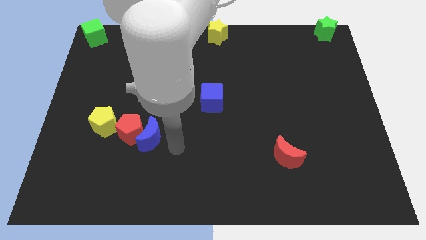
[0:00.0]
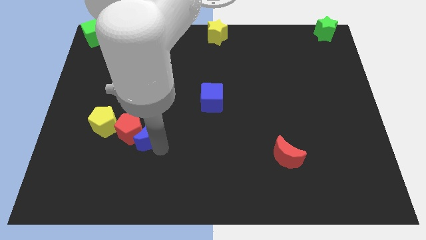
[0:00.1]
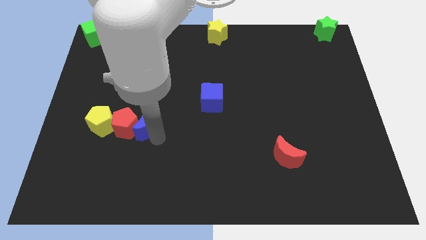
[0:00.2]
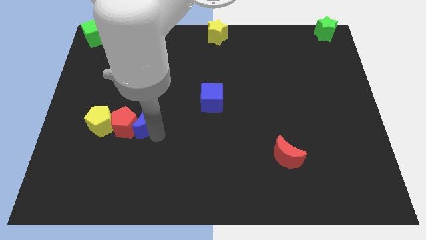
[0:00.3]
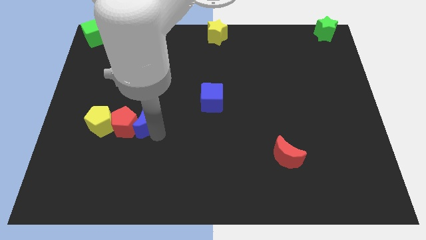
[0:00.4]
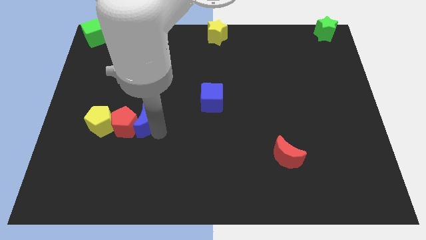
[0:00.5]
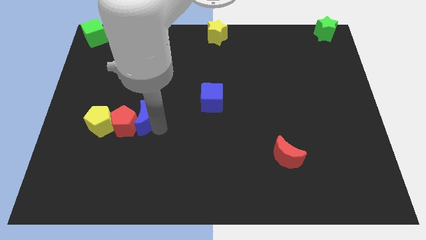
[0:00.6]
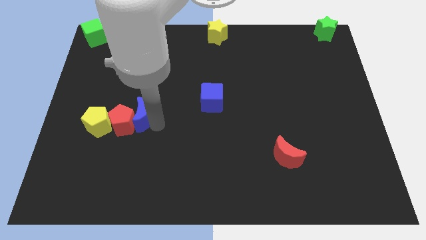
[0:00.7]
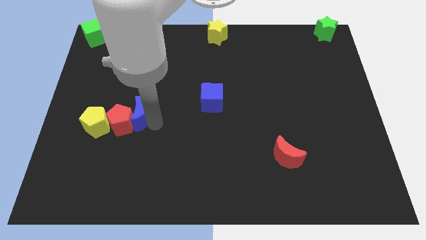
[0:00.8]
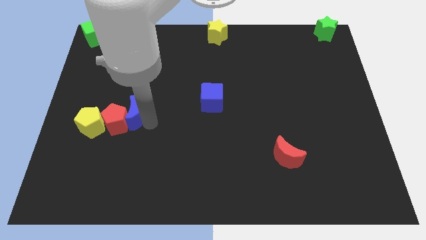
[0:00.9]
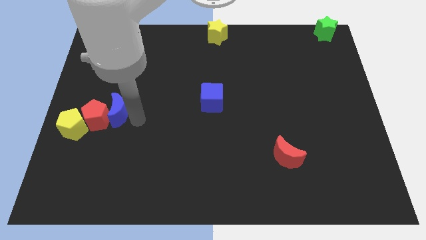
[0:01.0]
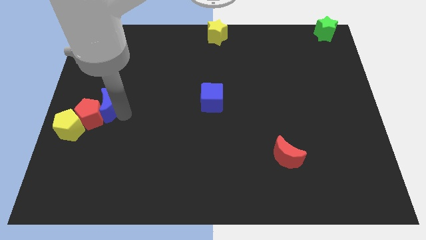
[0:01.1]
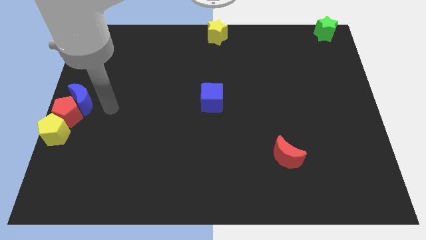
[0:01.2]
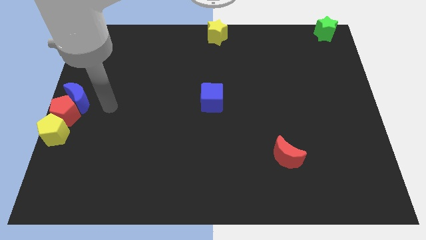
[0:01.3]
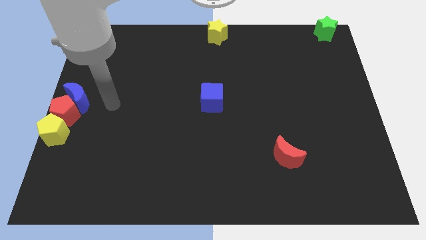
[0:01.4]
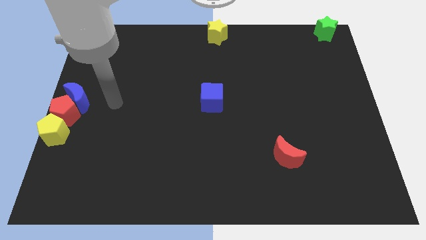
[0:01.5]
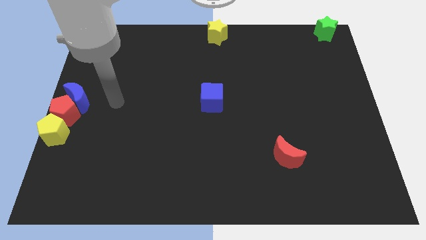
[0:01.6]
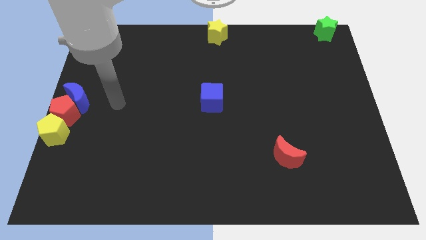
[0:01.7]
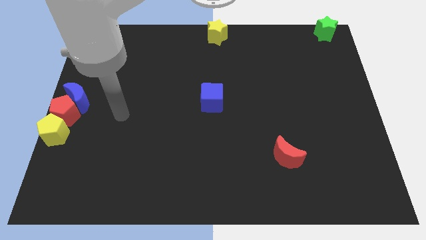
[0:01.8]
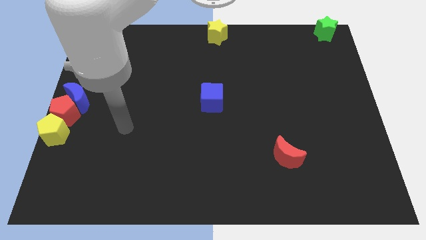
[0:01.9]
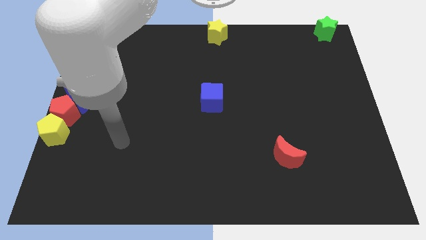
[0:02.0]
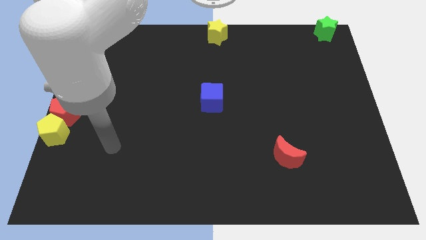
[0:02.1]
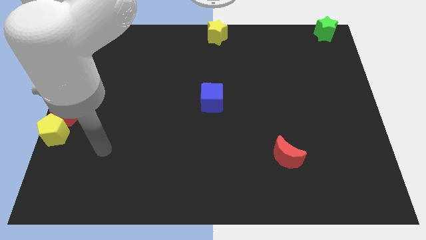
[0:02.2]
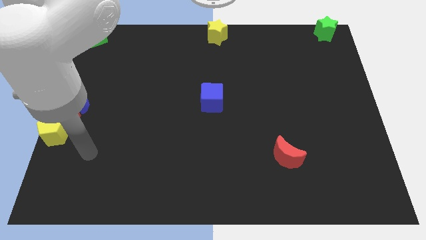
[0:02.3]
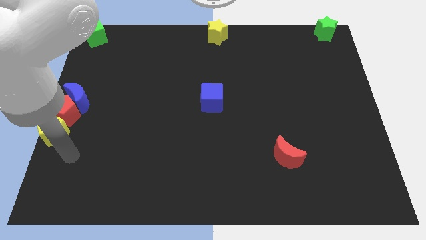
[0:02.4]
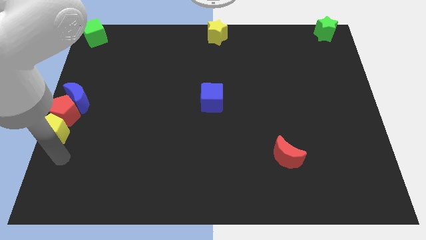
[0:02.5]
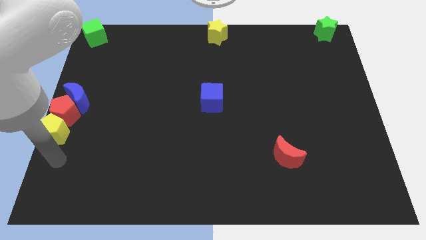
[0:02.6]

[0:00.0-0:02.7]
place the blue moon top of red pentagon

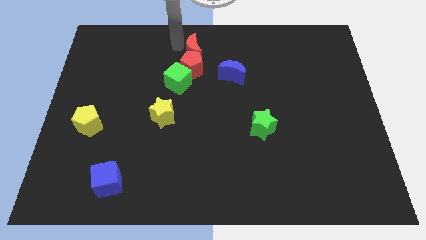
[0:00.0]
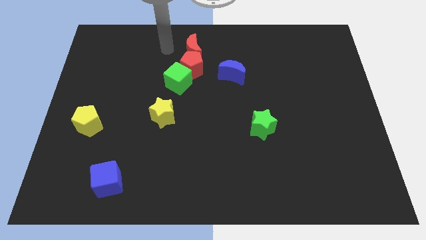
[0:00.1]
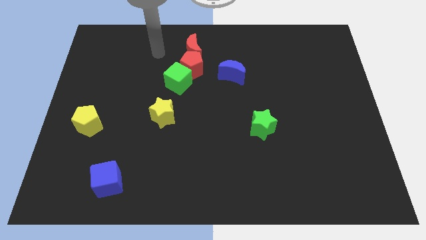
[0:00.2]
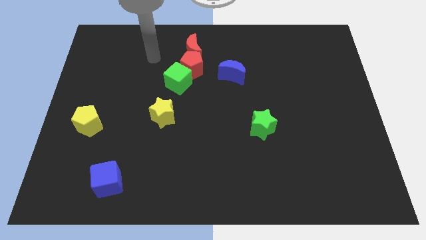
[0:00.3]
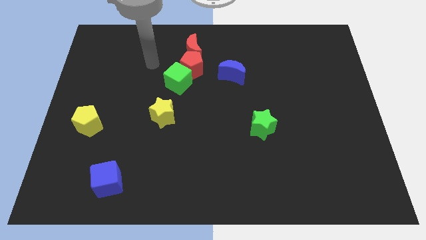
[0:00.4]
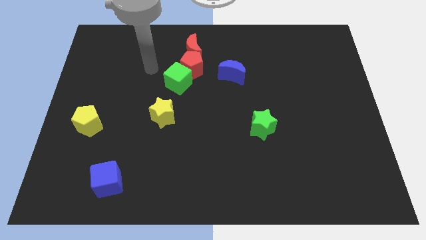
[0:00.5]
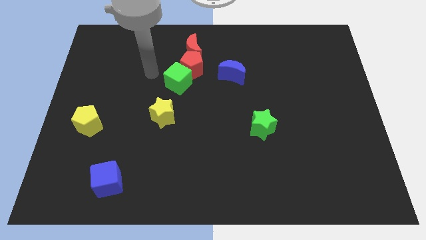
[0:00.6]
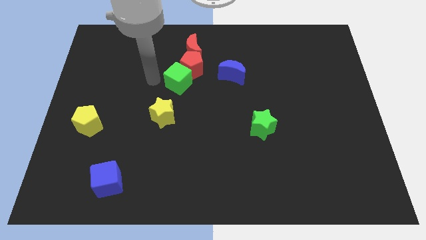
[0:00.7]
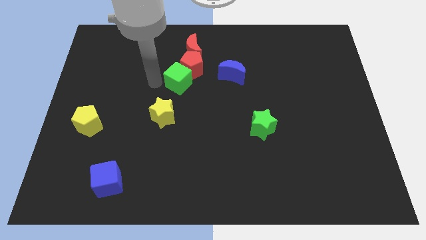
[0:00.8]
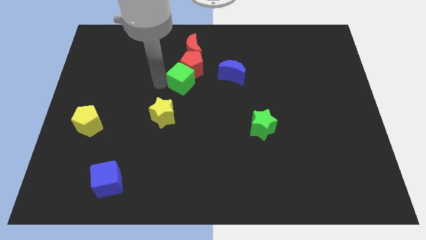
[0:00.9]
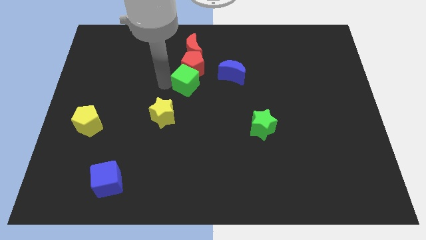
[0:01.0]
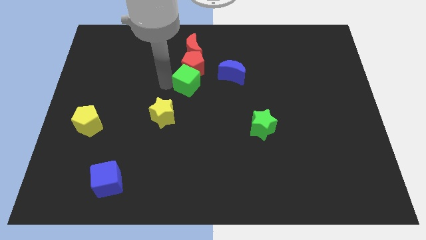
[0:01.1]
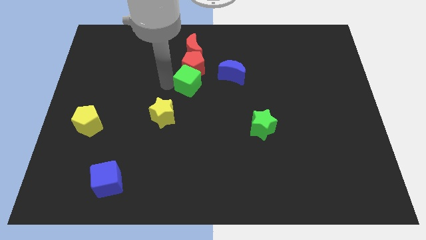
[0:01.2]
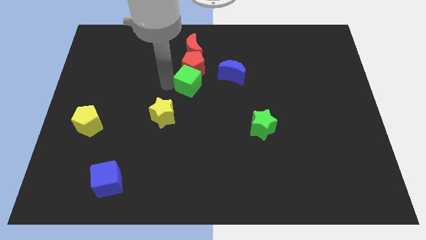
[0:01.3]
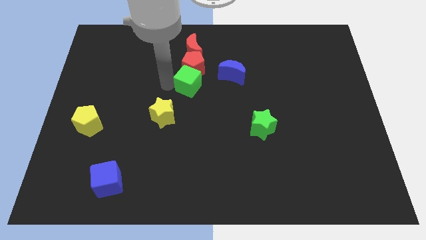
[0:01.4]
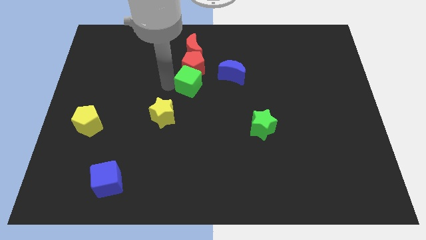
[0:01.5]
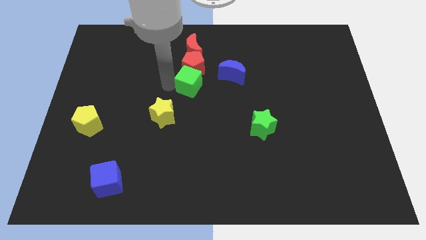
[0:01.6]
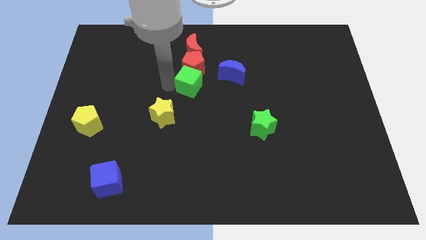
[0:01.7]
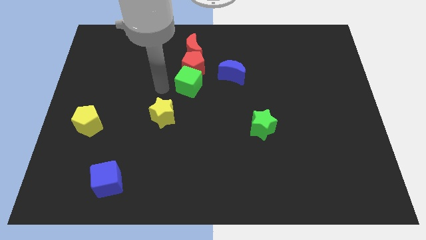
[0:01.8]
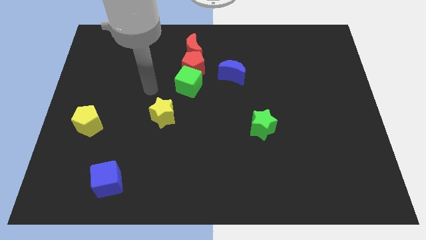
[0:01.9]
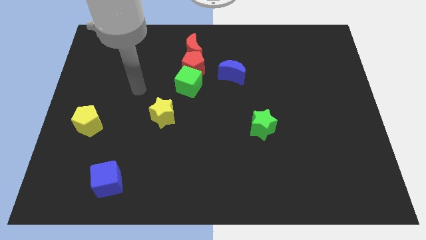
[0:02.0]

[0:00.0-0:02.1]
slightly push the green cube below red pentagon

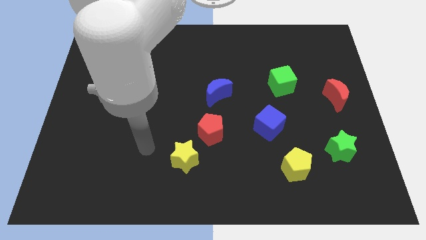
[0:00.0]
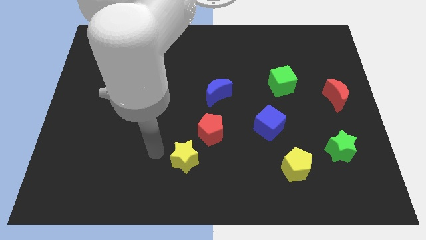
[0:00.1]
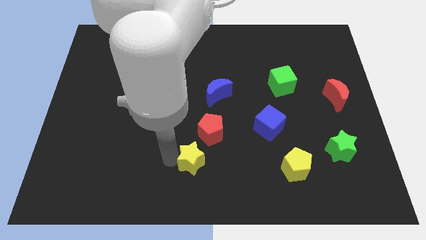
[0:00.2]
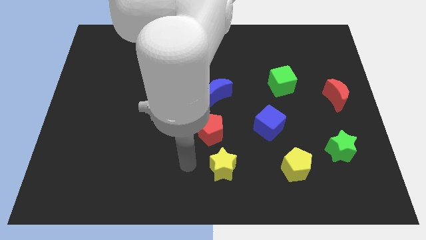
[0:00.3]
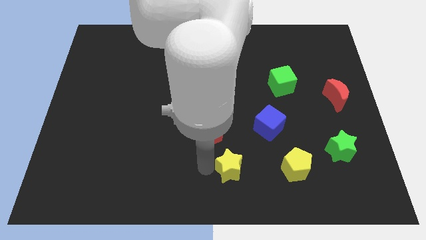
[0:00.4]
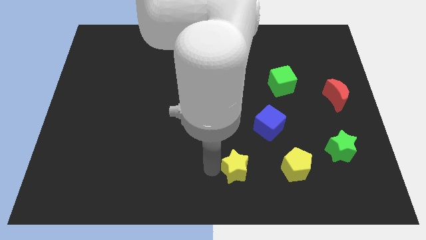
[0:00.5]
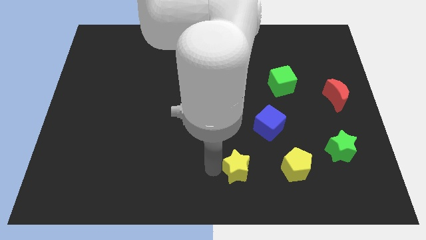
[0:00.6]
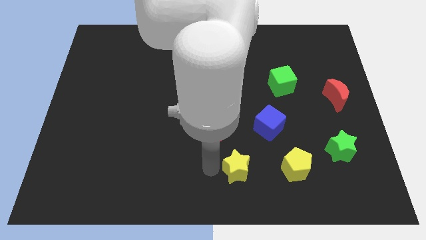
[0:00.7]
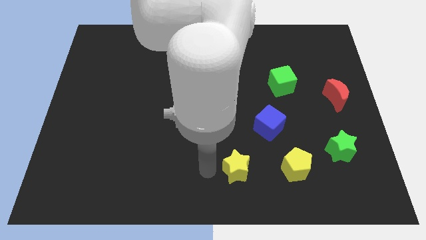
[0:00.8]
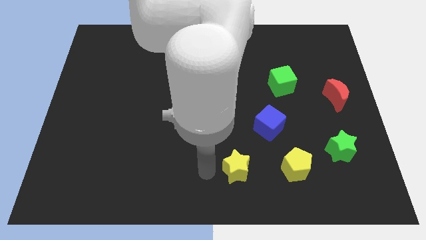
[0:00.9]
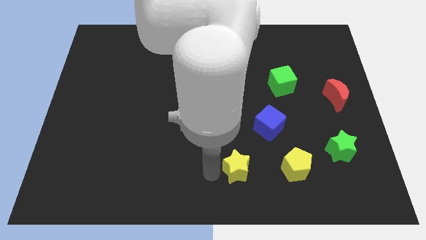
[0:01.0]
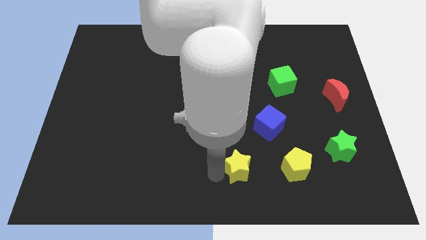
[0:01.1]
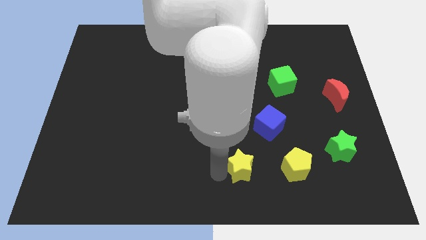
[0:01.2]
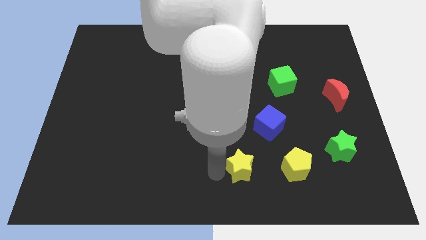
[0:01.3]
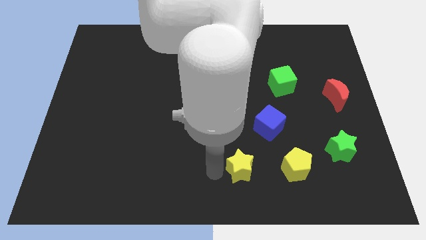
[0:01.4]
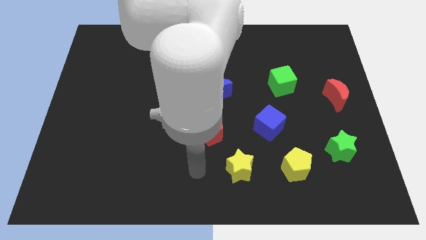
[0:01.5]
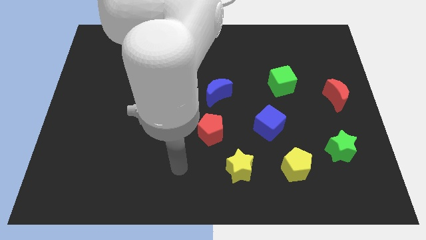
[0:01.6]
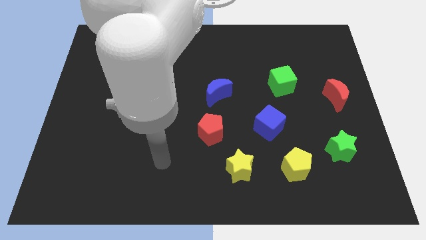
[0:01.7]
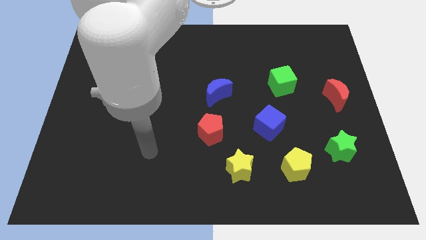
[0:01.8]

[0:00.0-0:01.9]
move the yellow star left to the yellow pentagon

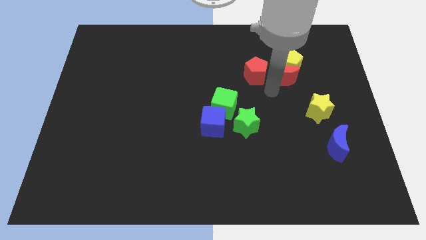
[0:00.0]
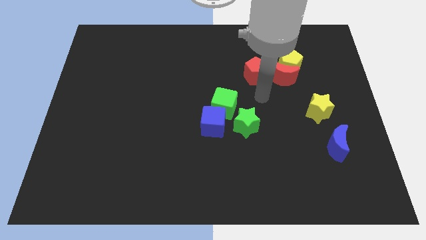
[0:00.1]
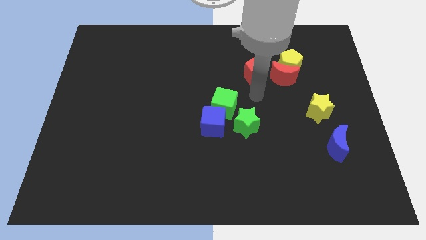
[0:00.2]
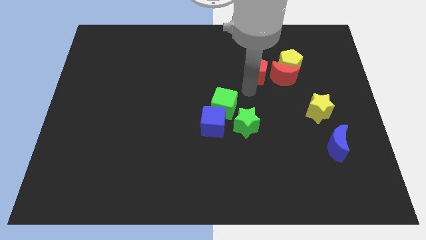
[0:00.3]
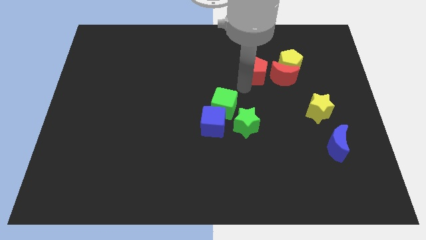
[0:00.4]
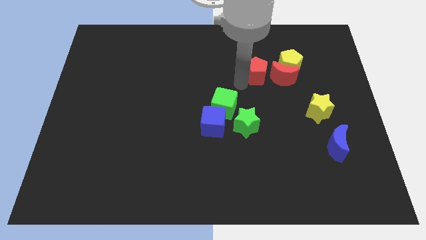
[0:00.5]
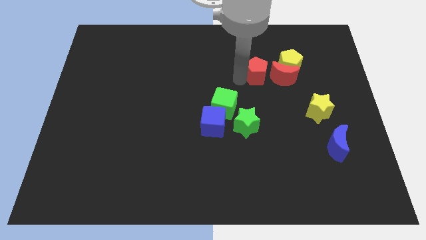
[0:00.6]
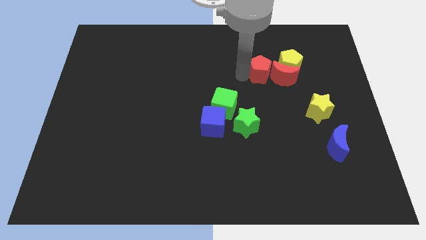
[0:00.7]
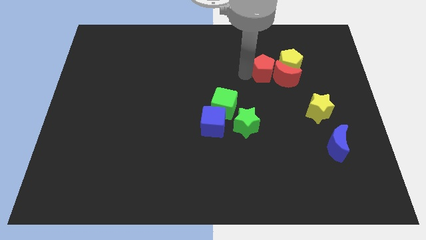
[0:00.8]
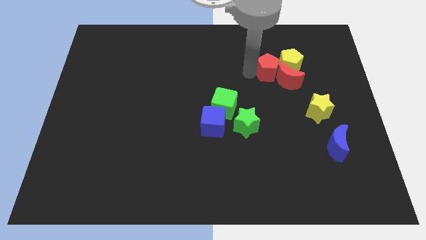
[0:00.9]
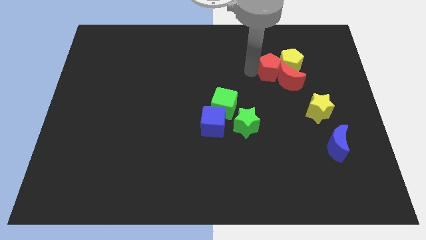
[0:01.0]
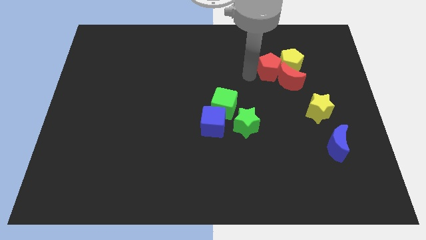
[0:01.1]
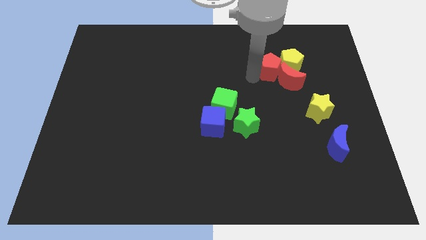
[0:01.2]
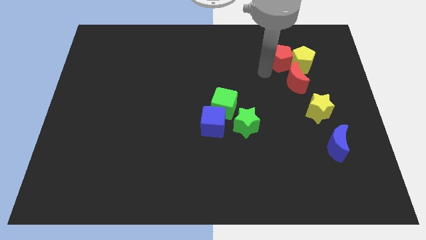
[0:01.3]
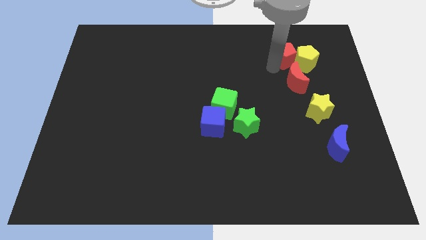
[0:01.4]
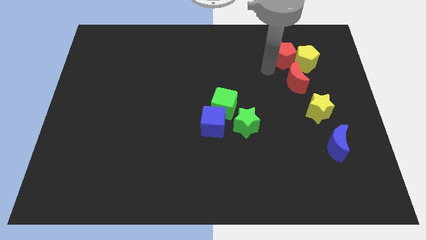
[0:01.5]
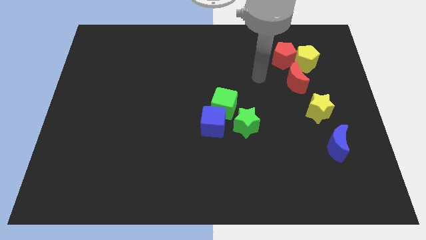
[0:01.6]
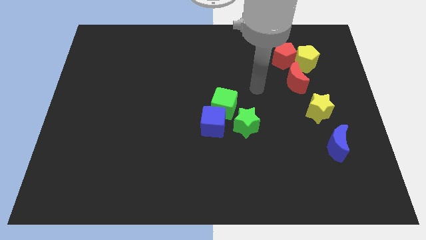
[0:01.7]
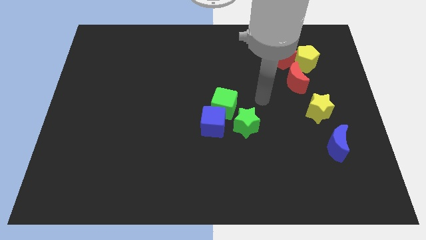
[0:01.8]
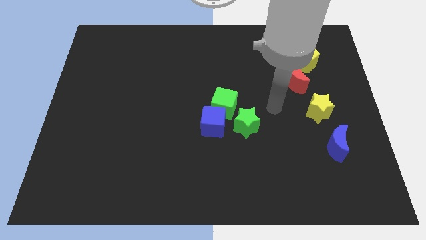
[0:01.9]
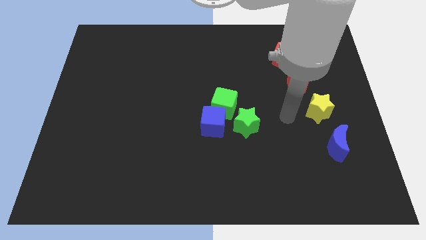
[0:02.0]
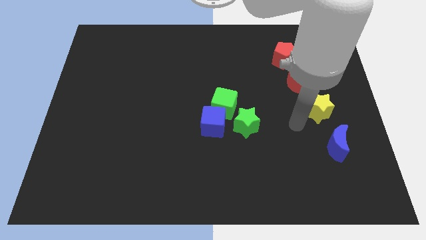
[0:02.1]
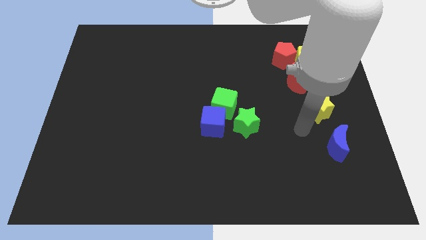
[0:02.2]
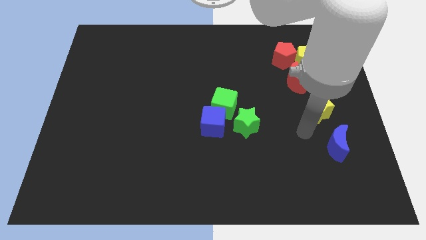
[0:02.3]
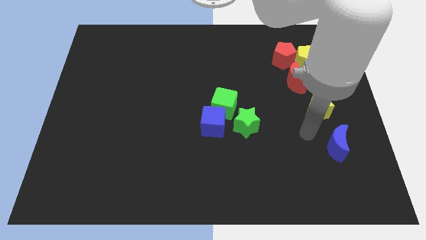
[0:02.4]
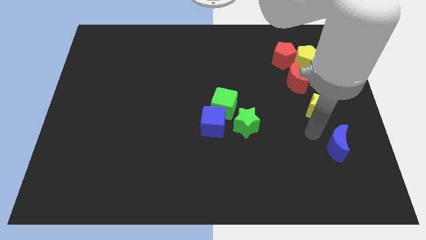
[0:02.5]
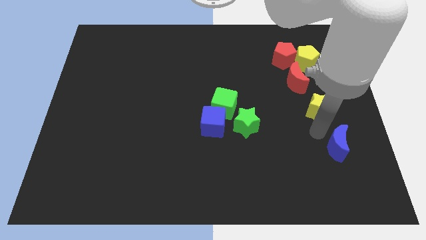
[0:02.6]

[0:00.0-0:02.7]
push the red pentagon into the yellow pentagon
